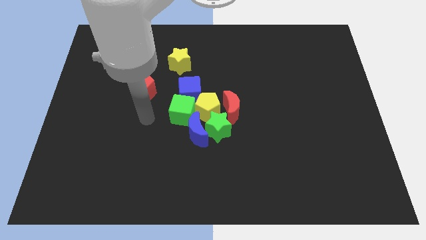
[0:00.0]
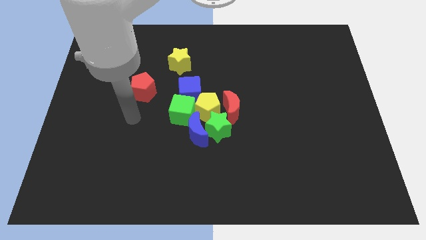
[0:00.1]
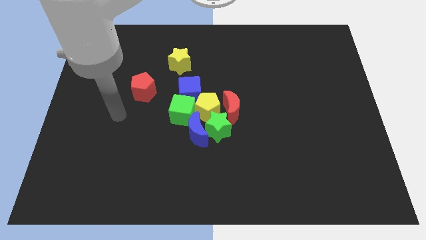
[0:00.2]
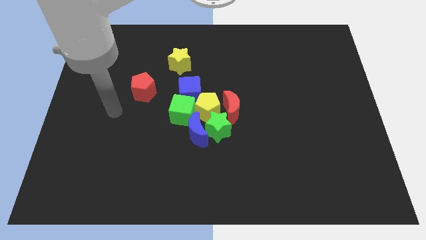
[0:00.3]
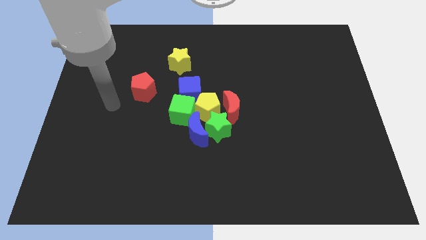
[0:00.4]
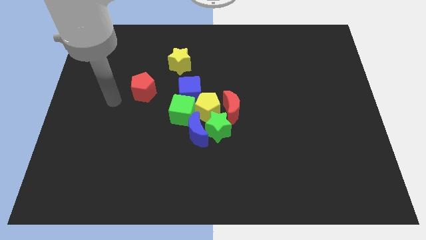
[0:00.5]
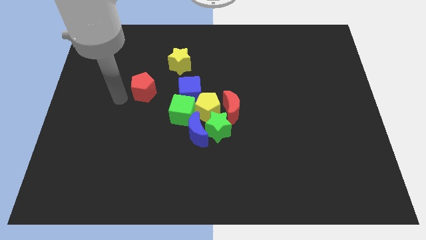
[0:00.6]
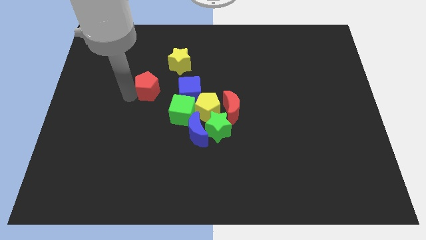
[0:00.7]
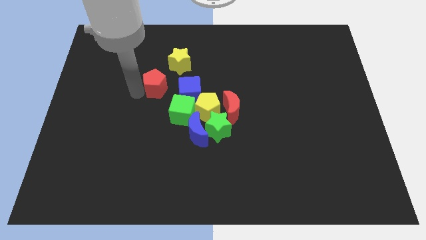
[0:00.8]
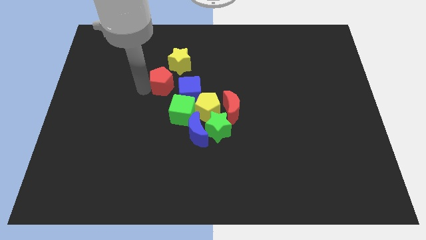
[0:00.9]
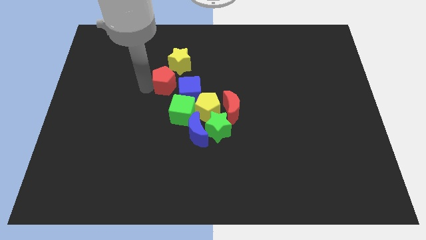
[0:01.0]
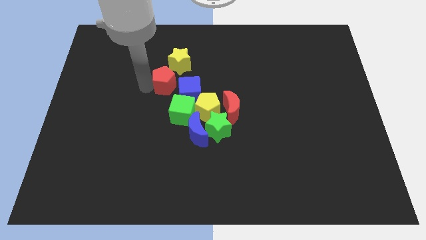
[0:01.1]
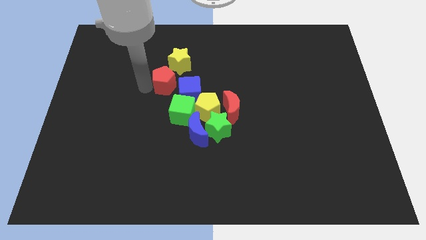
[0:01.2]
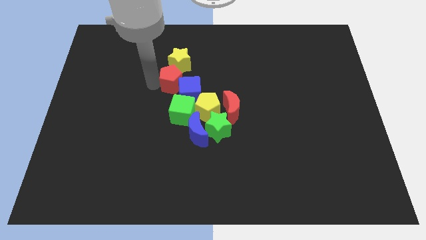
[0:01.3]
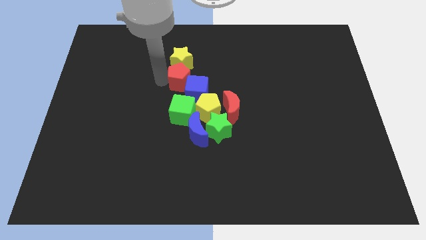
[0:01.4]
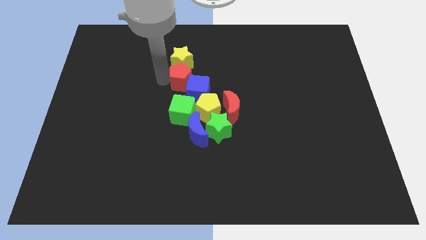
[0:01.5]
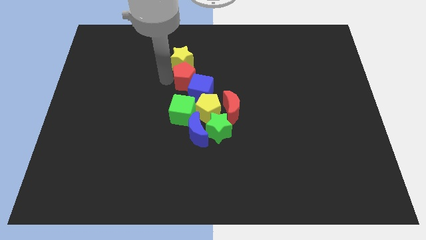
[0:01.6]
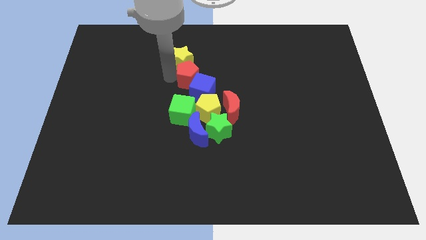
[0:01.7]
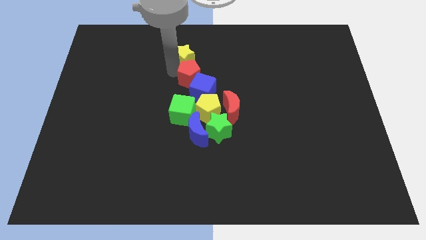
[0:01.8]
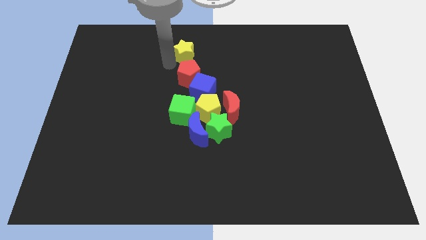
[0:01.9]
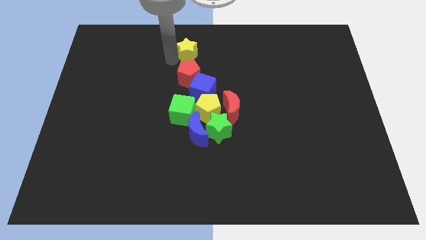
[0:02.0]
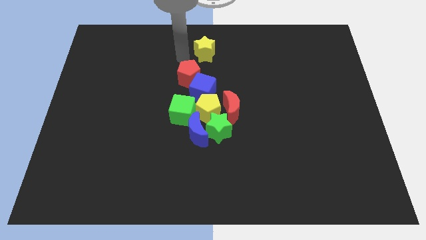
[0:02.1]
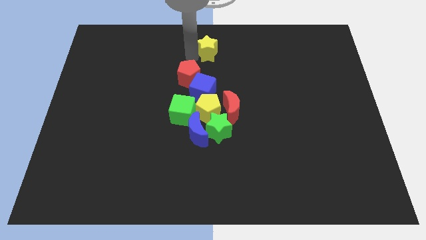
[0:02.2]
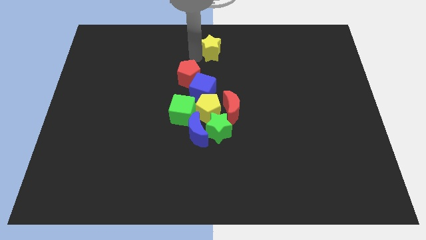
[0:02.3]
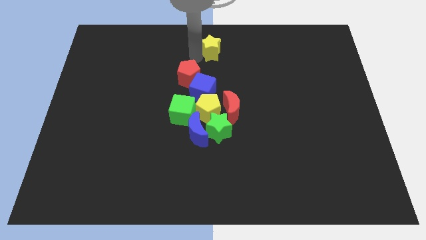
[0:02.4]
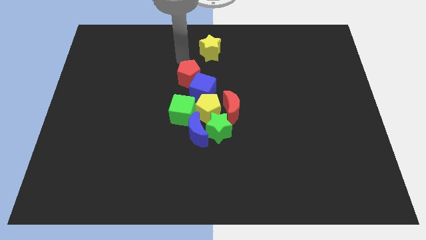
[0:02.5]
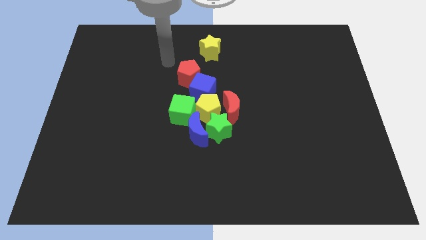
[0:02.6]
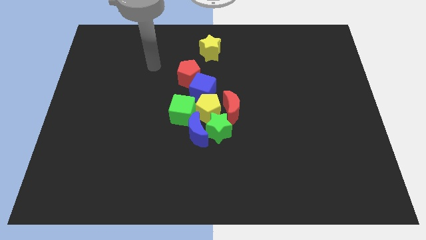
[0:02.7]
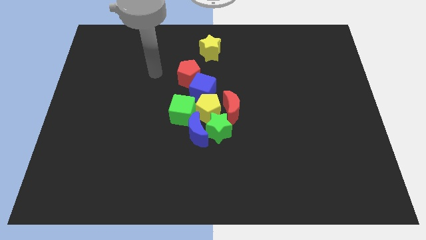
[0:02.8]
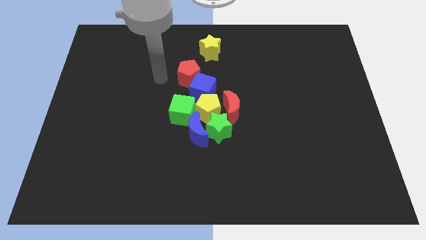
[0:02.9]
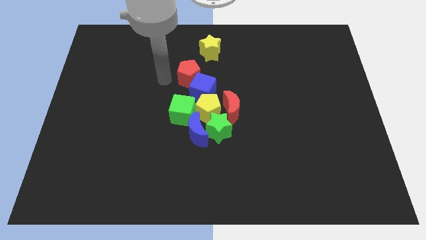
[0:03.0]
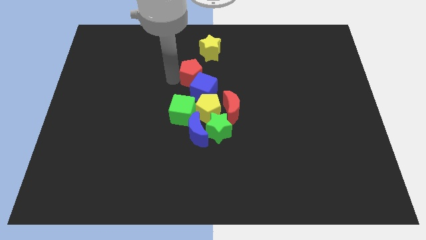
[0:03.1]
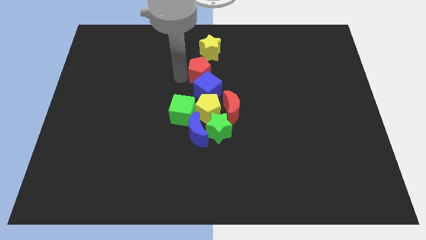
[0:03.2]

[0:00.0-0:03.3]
push the red pentagon and yellow star to the right side of the board

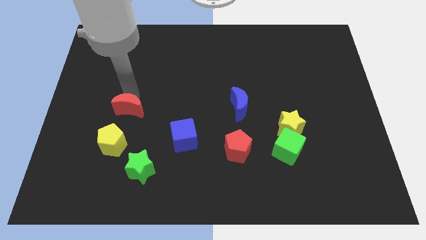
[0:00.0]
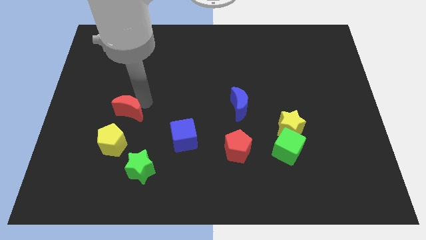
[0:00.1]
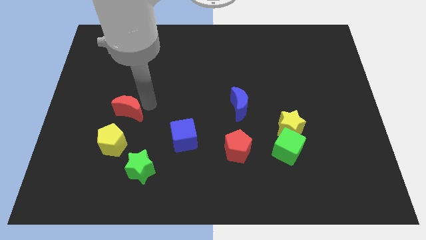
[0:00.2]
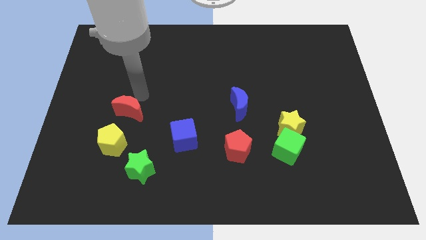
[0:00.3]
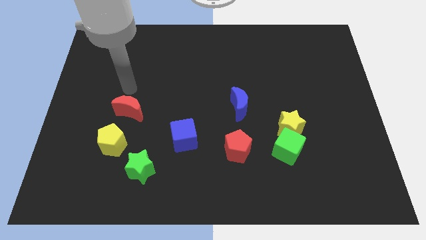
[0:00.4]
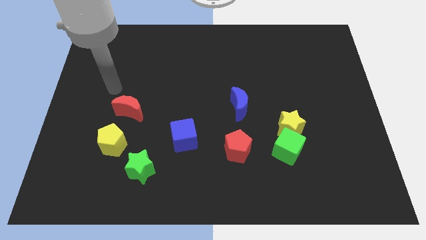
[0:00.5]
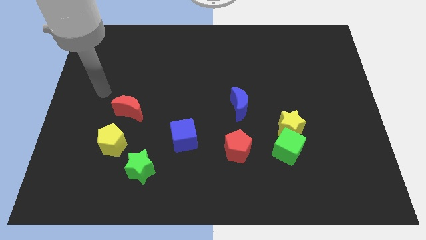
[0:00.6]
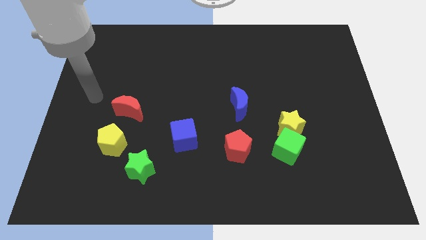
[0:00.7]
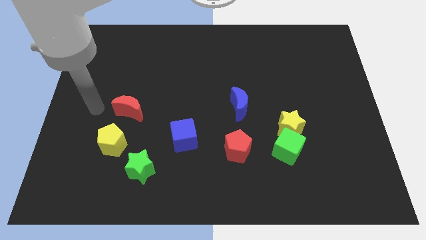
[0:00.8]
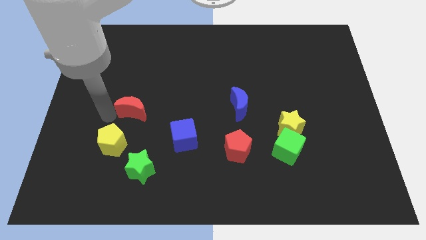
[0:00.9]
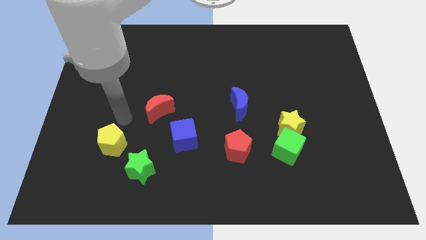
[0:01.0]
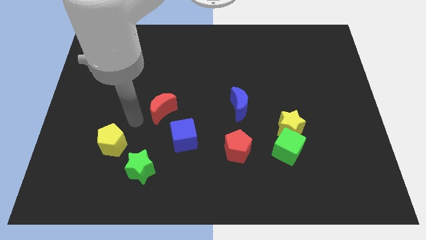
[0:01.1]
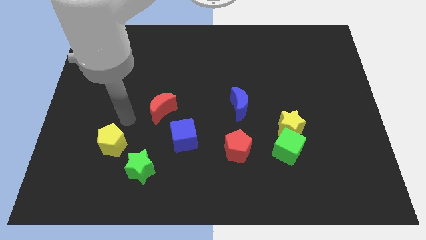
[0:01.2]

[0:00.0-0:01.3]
place the red moon right to the yellow pentagon

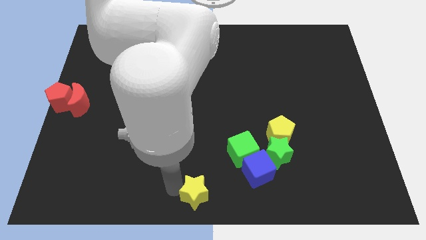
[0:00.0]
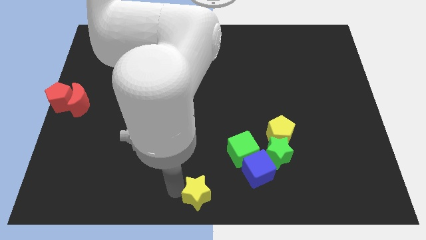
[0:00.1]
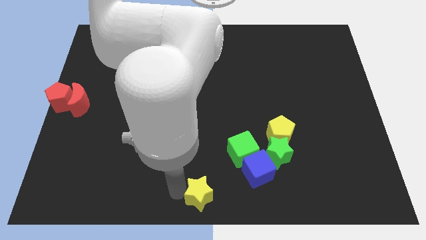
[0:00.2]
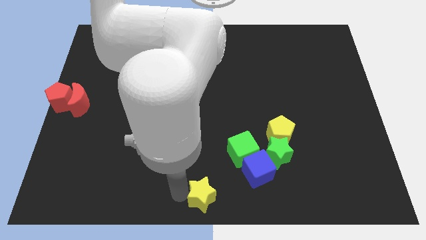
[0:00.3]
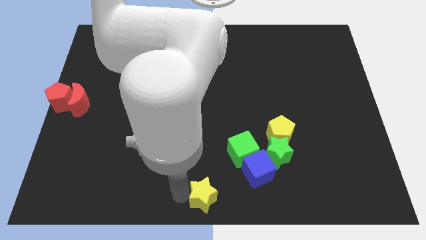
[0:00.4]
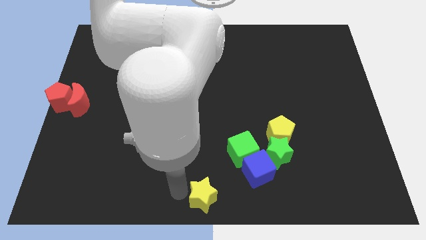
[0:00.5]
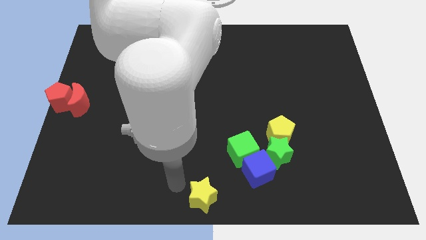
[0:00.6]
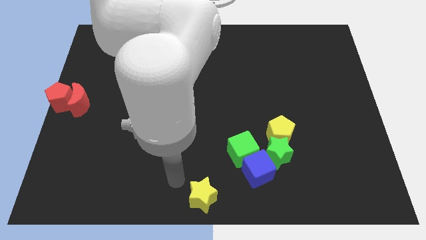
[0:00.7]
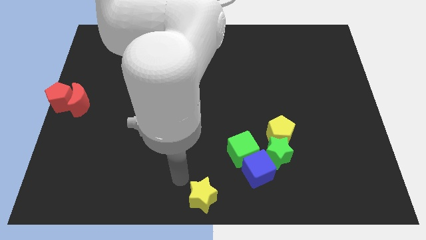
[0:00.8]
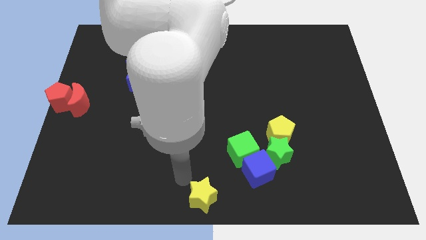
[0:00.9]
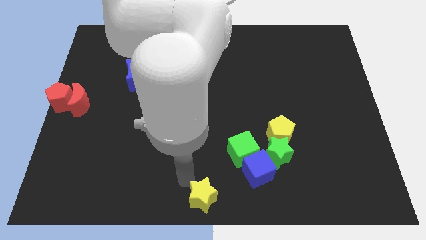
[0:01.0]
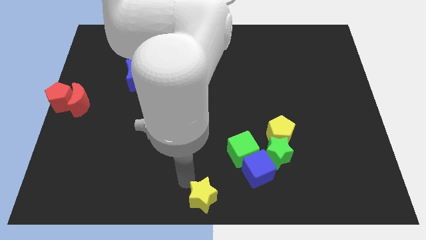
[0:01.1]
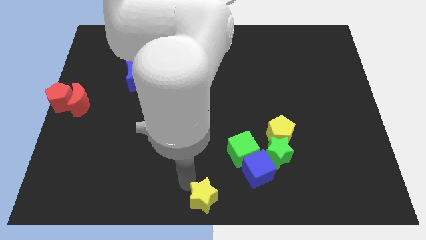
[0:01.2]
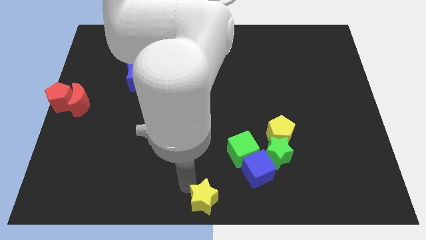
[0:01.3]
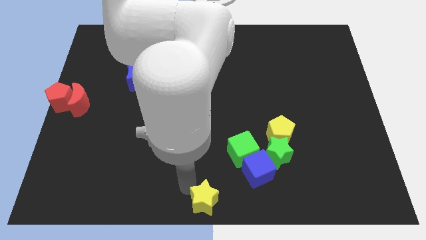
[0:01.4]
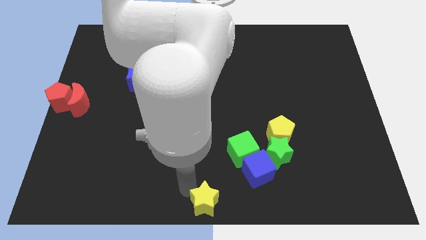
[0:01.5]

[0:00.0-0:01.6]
adjust the yellow star at bottom center of the board

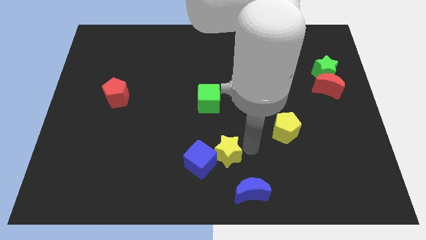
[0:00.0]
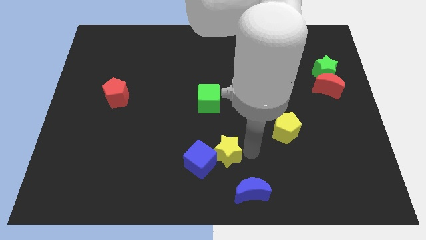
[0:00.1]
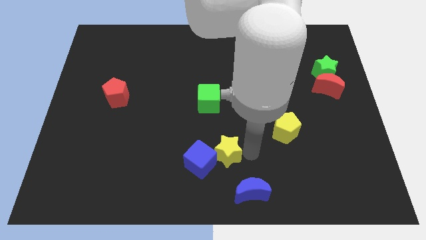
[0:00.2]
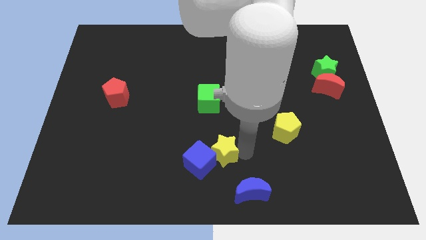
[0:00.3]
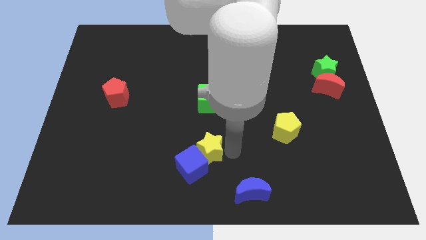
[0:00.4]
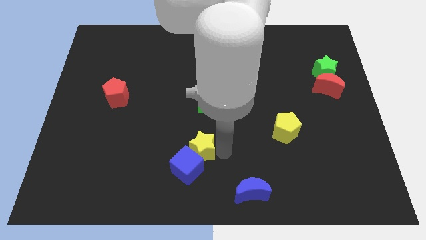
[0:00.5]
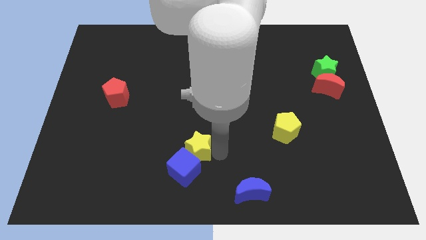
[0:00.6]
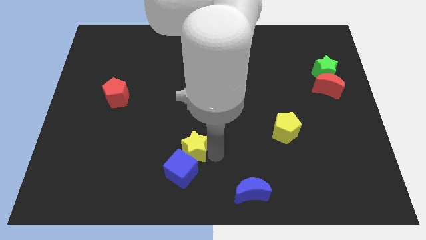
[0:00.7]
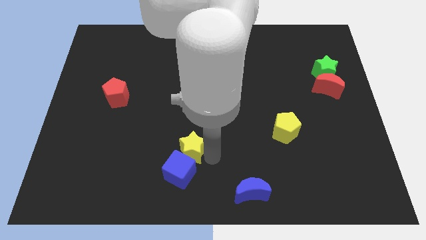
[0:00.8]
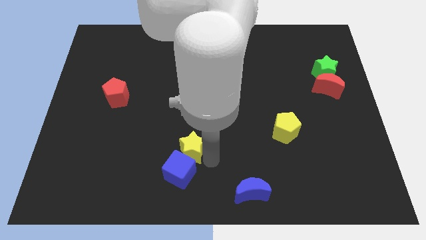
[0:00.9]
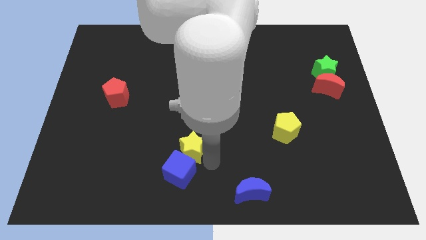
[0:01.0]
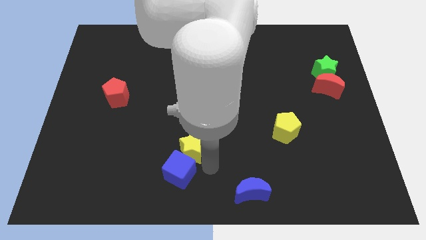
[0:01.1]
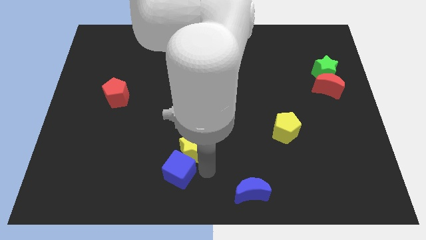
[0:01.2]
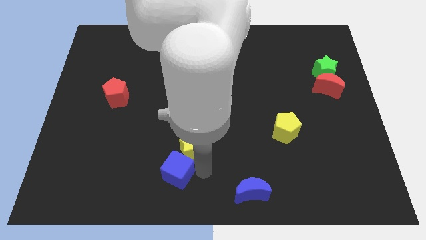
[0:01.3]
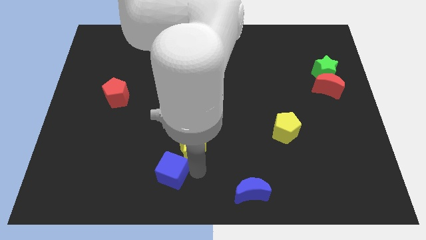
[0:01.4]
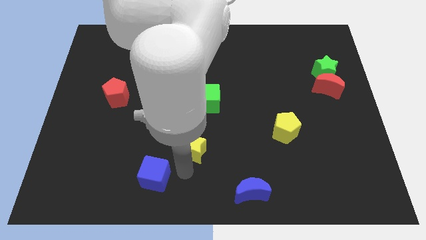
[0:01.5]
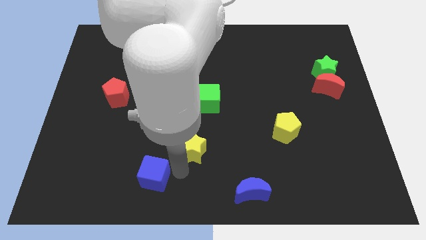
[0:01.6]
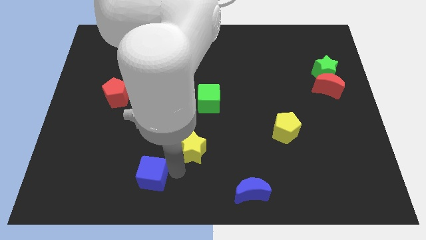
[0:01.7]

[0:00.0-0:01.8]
move the yellow star and blue cube slightly left

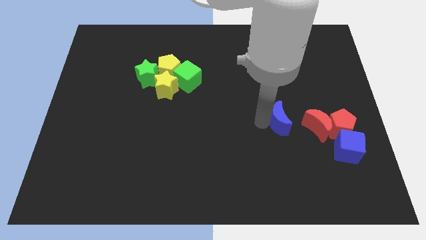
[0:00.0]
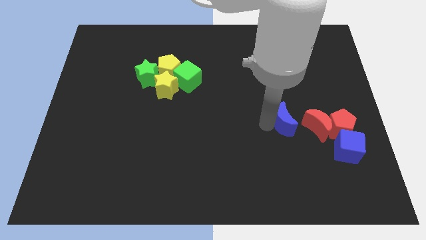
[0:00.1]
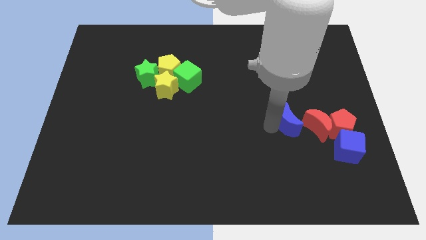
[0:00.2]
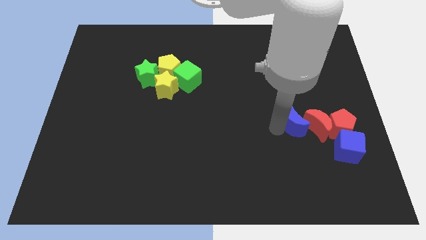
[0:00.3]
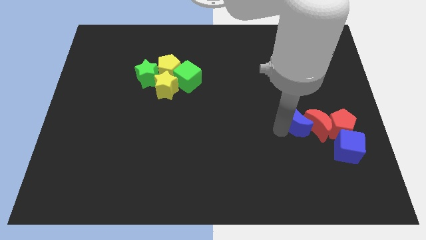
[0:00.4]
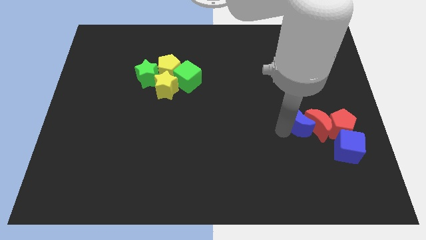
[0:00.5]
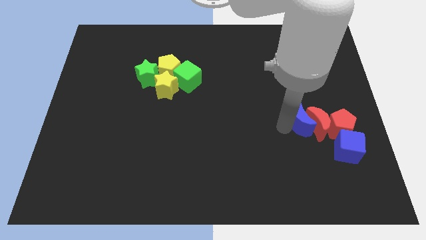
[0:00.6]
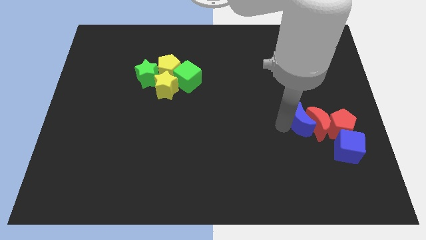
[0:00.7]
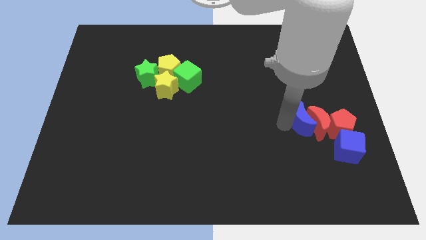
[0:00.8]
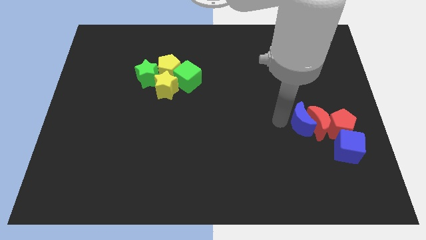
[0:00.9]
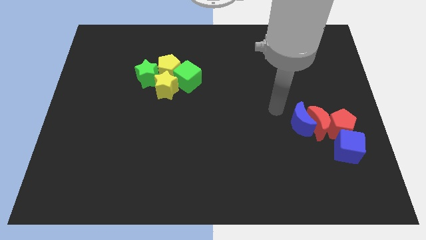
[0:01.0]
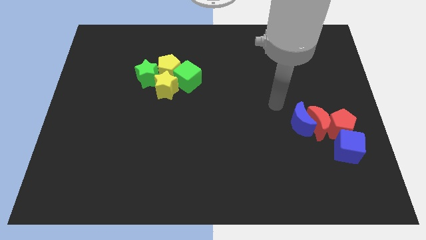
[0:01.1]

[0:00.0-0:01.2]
push the blue moon into the red moon
